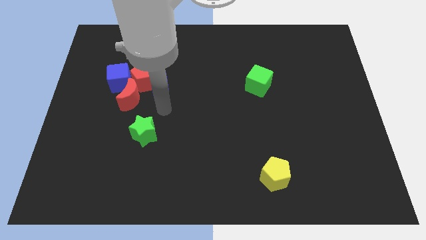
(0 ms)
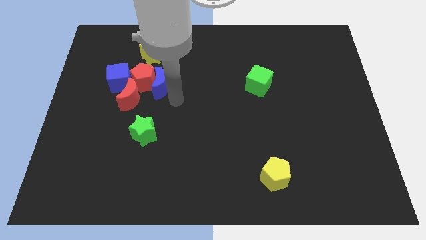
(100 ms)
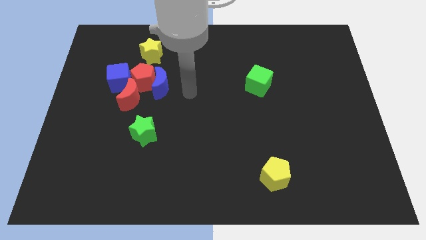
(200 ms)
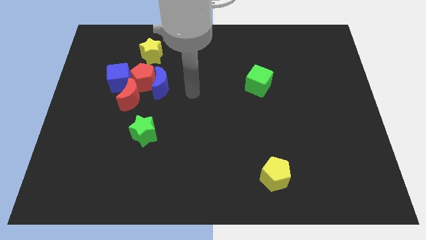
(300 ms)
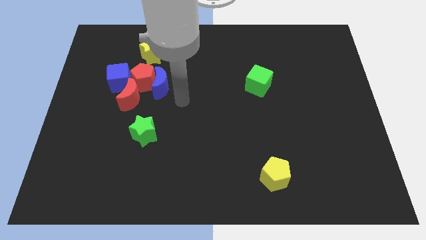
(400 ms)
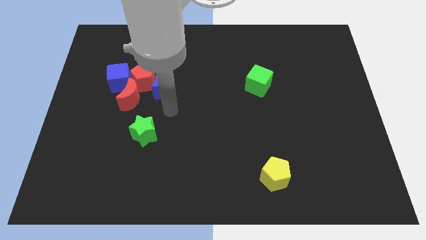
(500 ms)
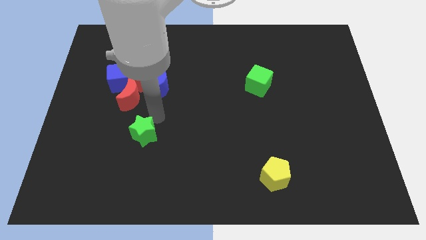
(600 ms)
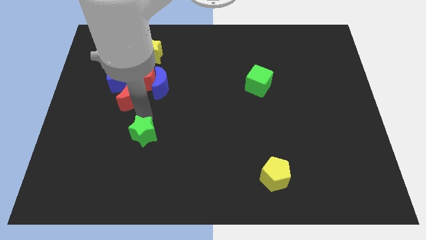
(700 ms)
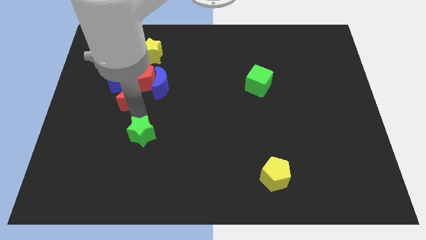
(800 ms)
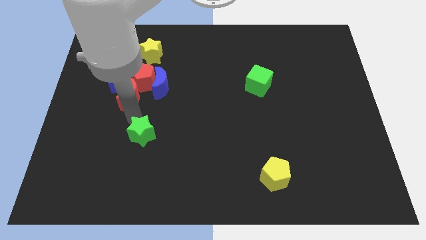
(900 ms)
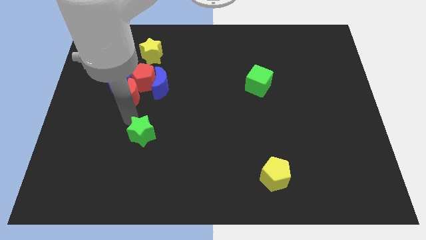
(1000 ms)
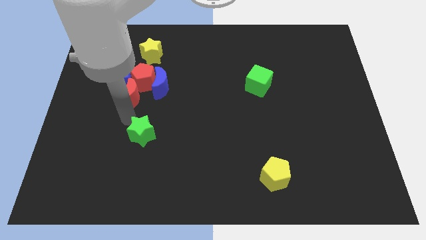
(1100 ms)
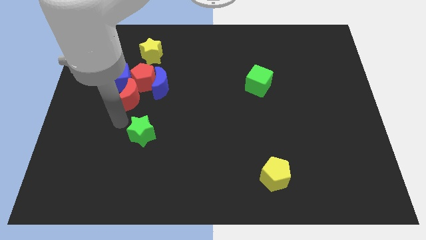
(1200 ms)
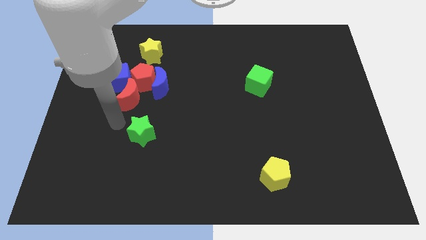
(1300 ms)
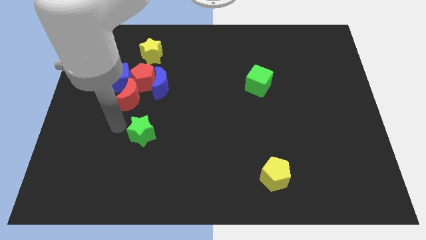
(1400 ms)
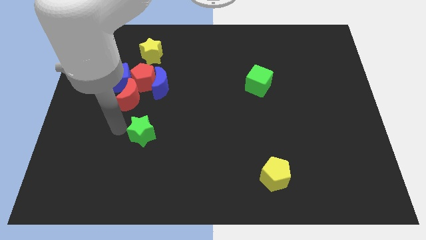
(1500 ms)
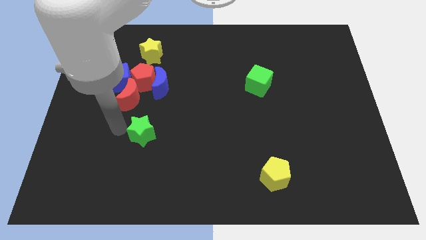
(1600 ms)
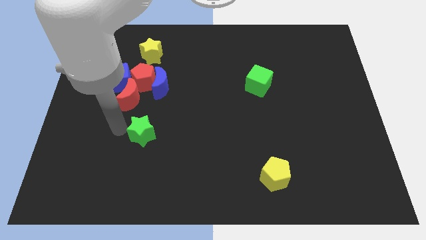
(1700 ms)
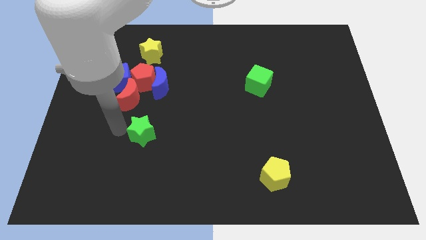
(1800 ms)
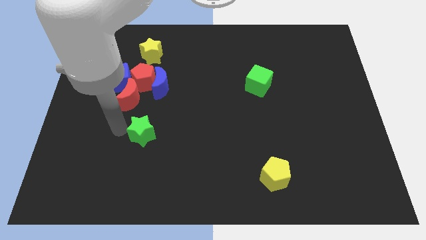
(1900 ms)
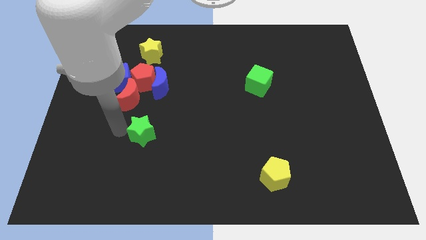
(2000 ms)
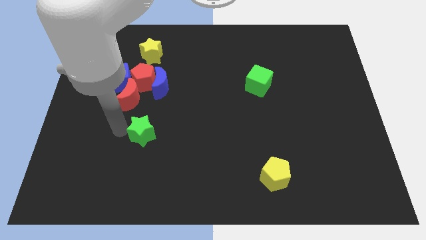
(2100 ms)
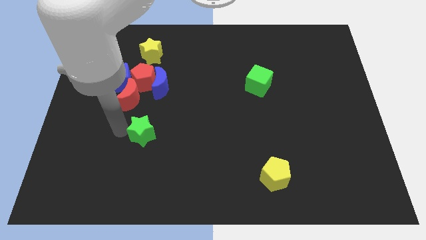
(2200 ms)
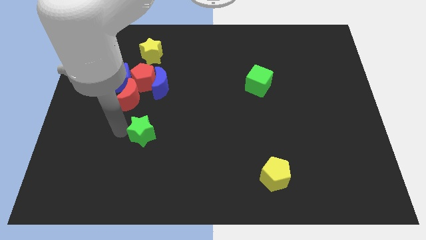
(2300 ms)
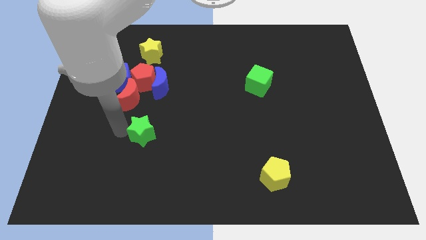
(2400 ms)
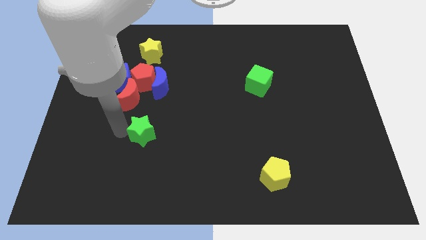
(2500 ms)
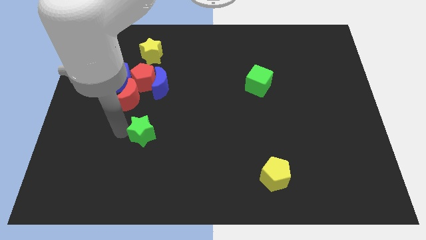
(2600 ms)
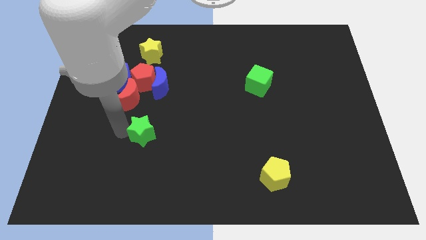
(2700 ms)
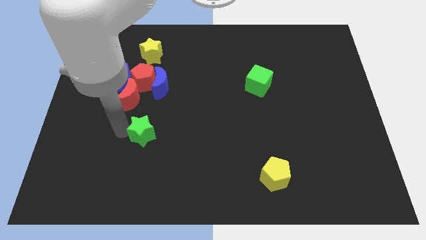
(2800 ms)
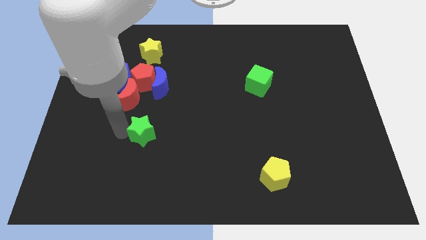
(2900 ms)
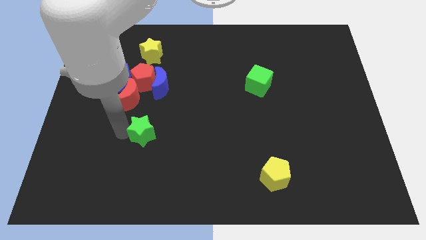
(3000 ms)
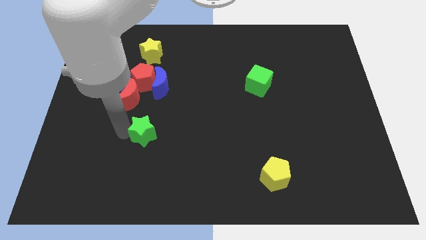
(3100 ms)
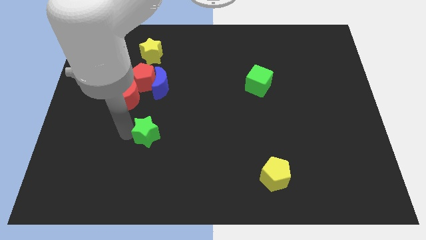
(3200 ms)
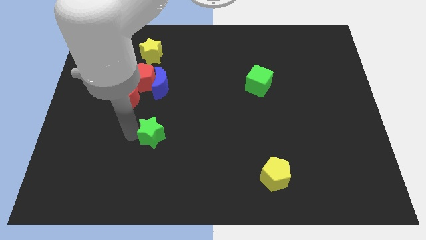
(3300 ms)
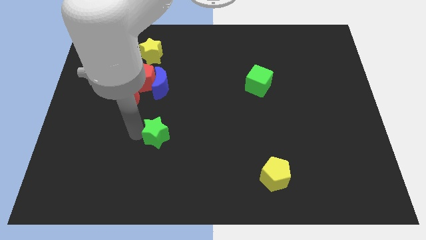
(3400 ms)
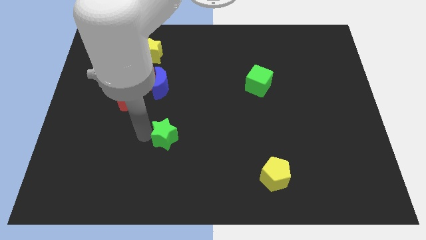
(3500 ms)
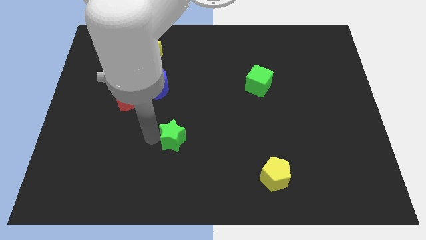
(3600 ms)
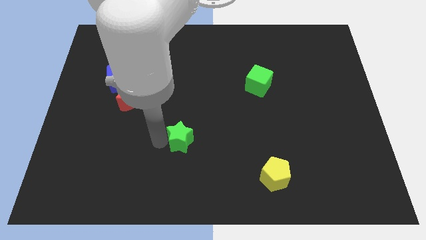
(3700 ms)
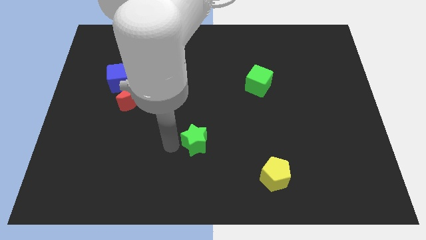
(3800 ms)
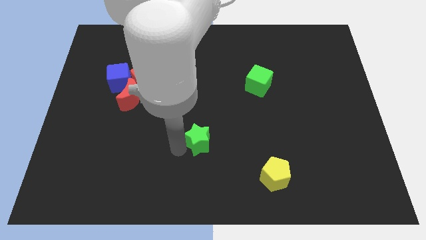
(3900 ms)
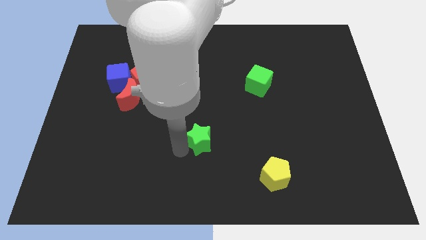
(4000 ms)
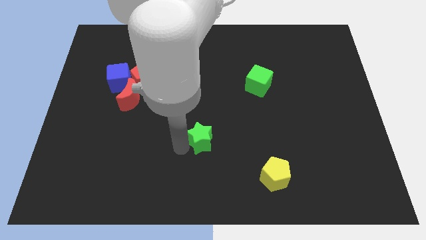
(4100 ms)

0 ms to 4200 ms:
move the green star diagonally to the top left to the yellow pentagon

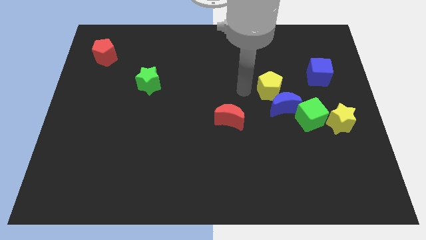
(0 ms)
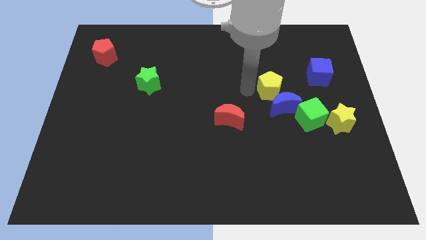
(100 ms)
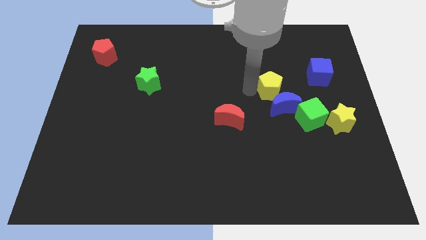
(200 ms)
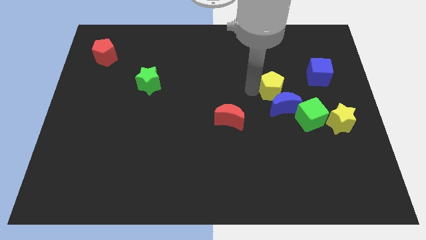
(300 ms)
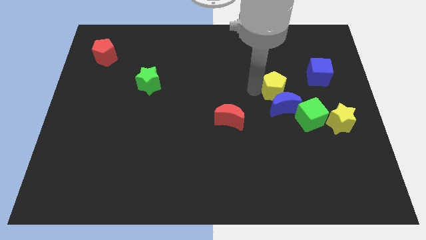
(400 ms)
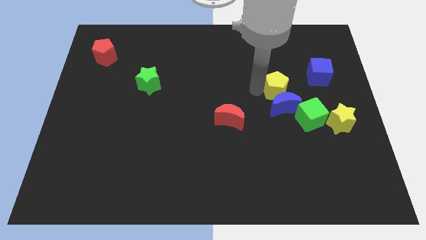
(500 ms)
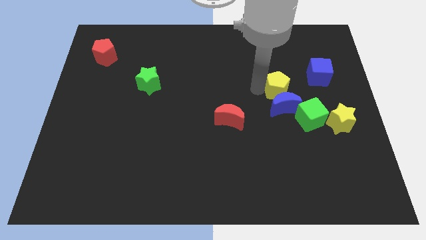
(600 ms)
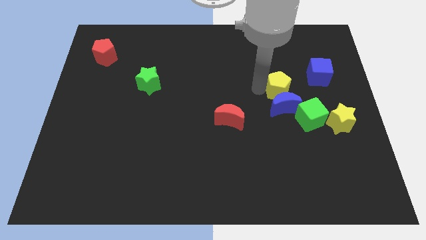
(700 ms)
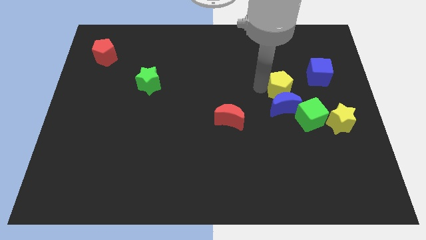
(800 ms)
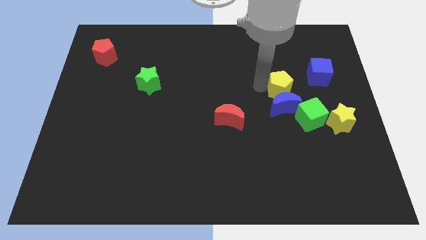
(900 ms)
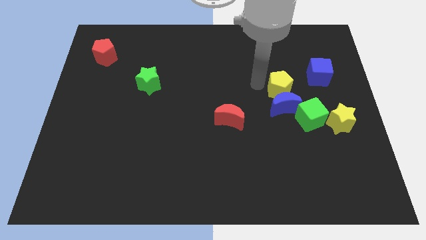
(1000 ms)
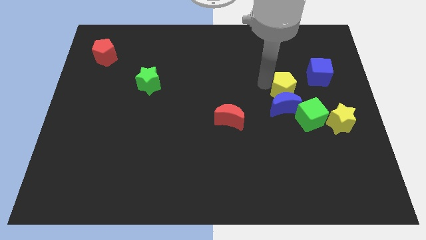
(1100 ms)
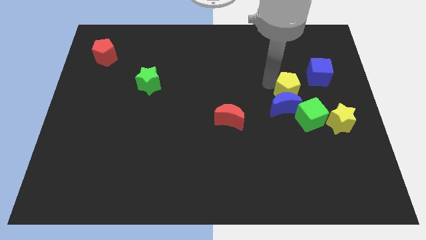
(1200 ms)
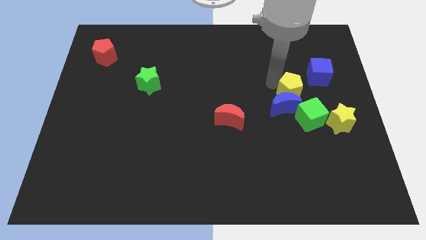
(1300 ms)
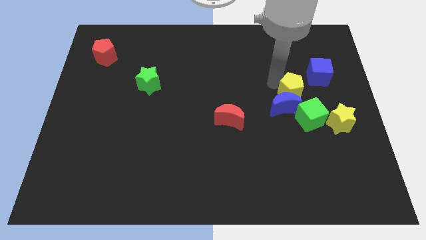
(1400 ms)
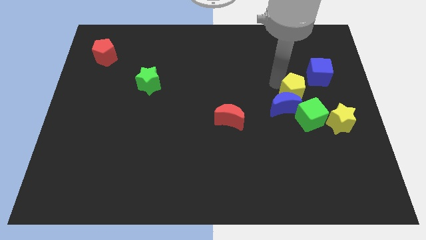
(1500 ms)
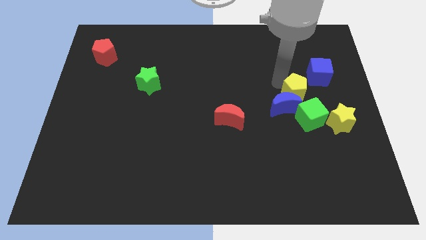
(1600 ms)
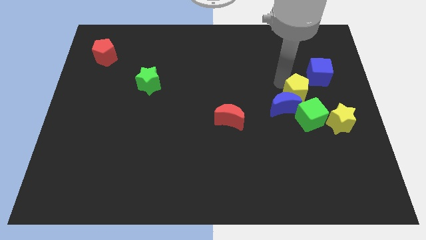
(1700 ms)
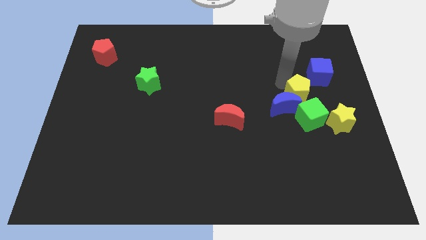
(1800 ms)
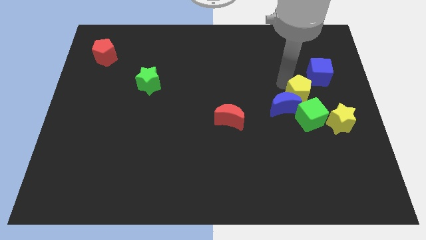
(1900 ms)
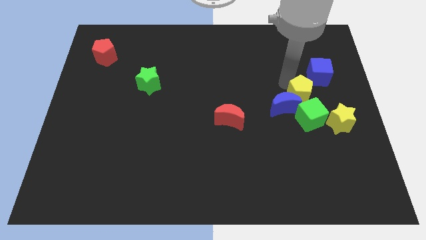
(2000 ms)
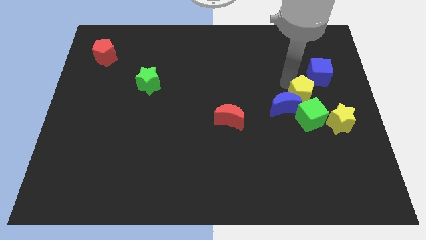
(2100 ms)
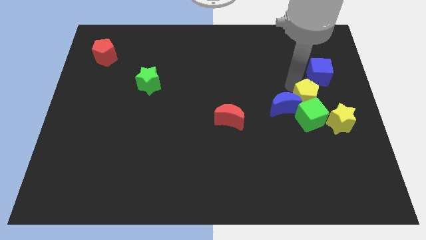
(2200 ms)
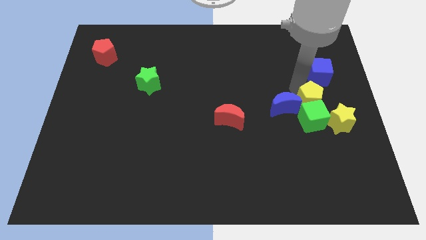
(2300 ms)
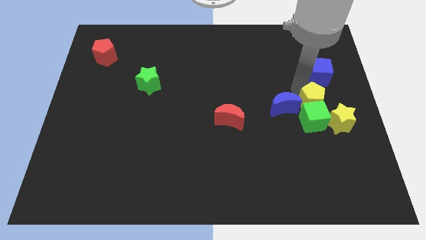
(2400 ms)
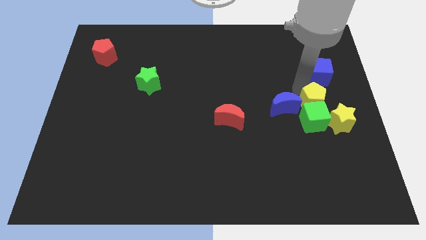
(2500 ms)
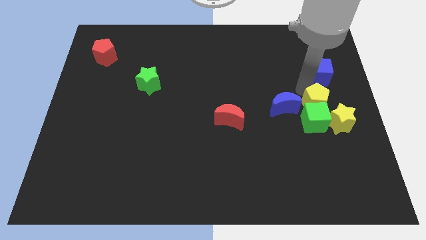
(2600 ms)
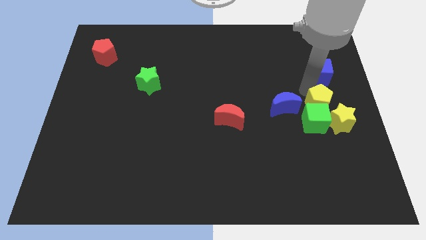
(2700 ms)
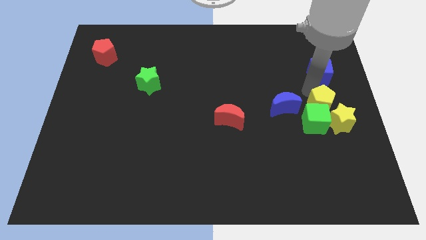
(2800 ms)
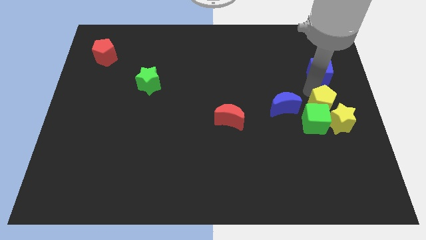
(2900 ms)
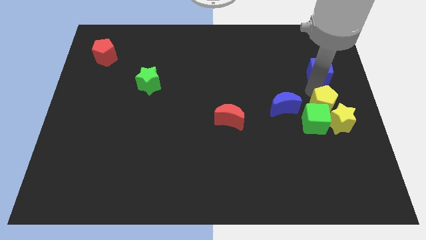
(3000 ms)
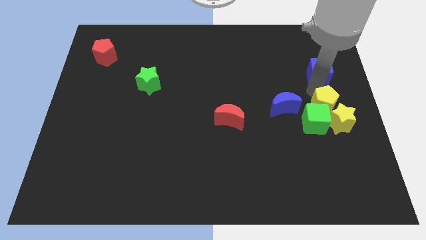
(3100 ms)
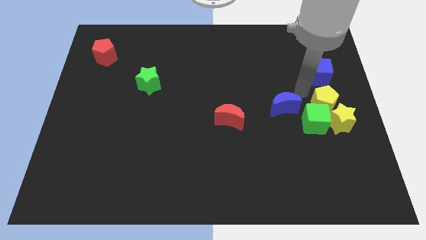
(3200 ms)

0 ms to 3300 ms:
move the yellow pentagon at the center top of the green cube and yellow star

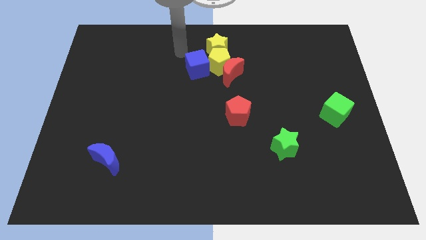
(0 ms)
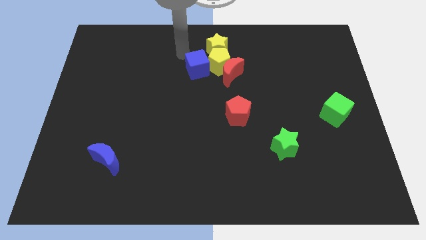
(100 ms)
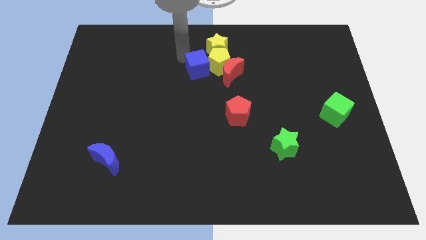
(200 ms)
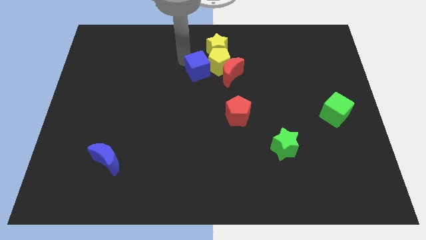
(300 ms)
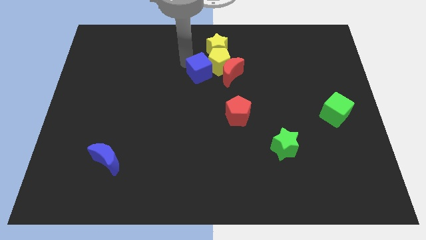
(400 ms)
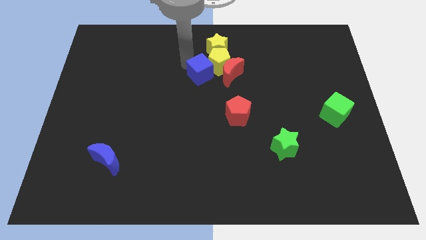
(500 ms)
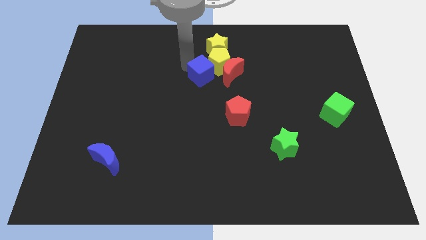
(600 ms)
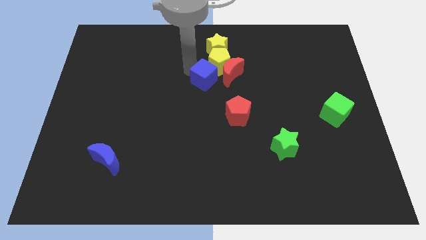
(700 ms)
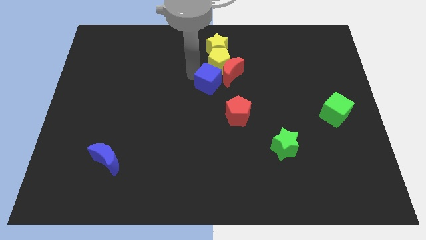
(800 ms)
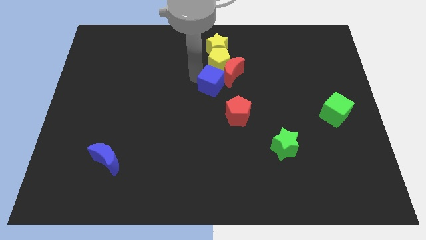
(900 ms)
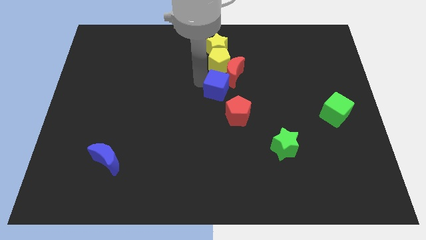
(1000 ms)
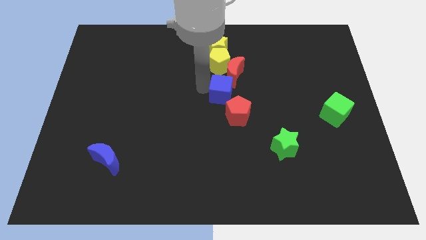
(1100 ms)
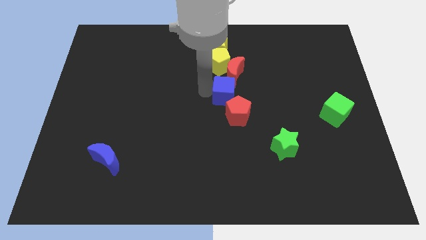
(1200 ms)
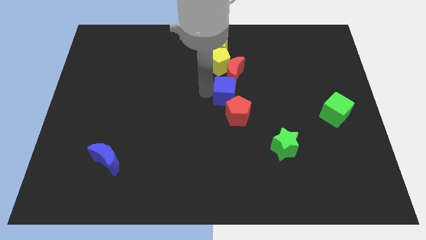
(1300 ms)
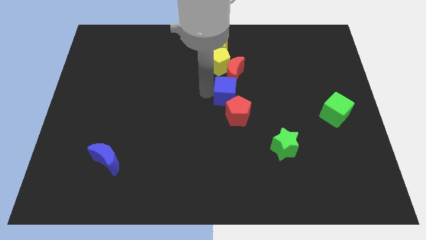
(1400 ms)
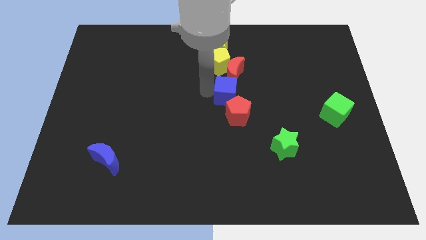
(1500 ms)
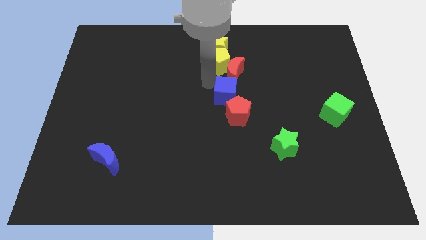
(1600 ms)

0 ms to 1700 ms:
move the blue cube above to the red pentagon
